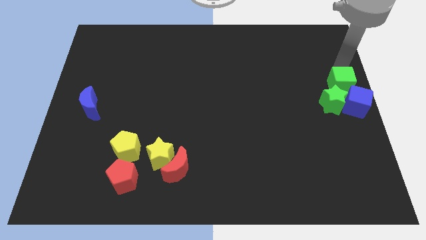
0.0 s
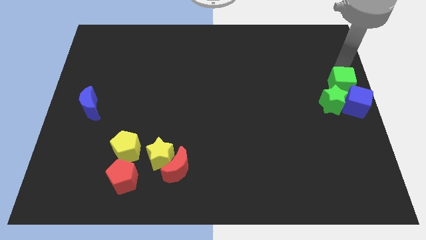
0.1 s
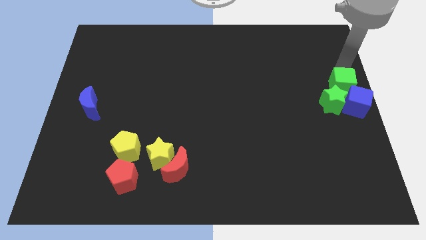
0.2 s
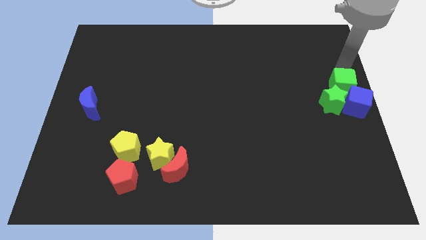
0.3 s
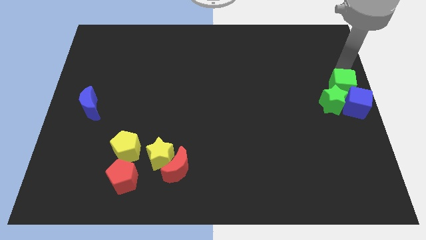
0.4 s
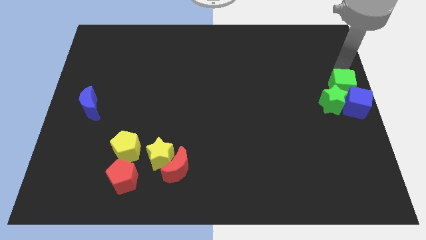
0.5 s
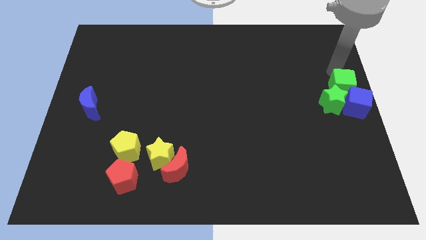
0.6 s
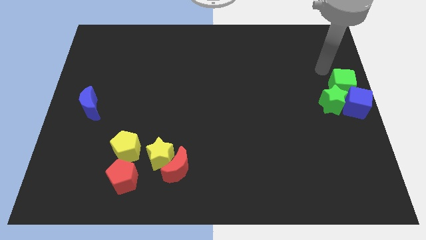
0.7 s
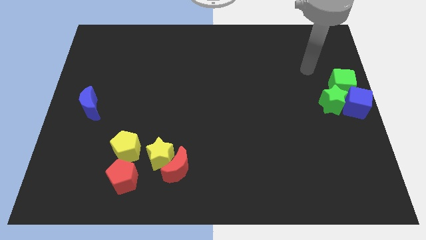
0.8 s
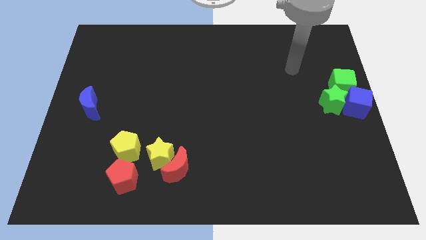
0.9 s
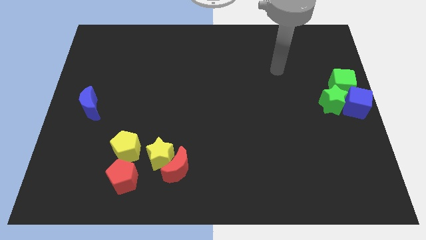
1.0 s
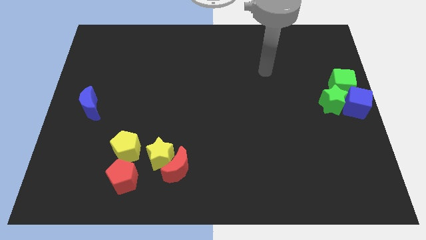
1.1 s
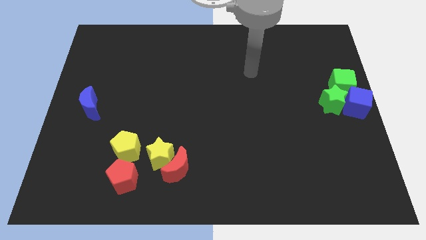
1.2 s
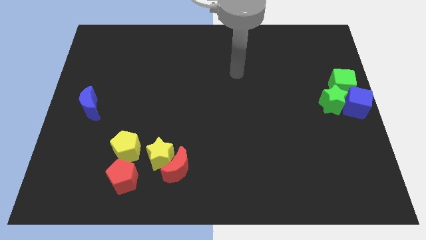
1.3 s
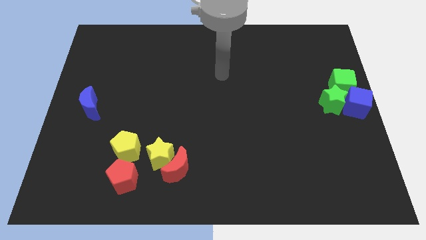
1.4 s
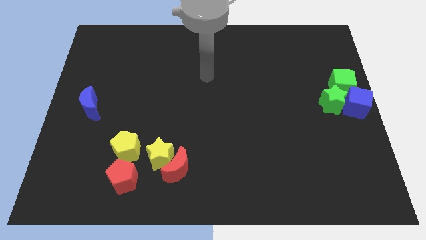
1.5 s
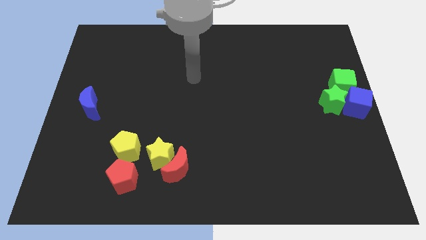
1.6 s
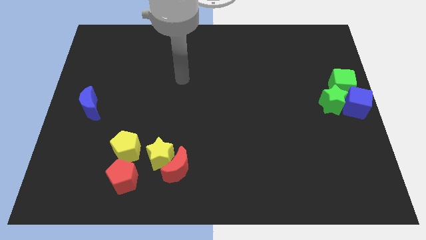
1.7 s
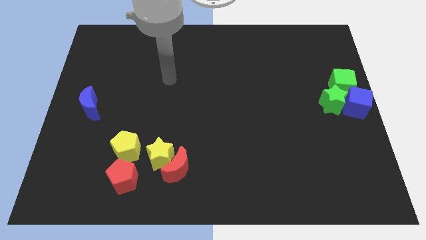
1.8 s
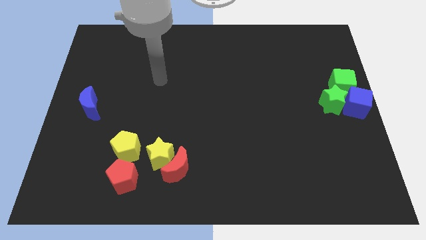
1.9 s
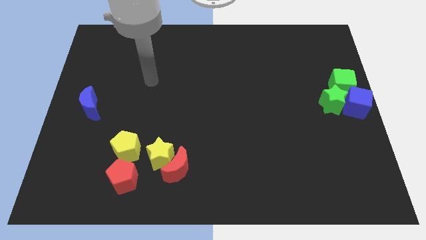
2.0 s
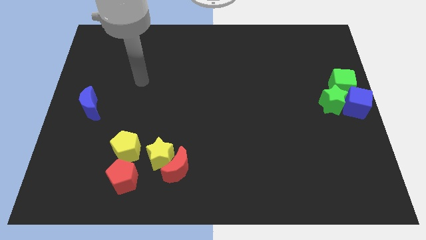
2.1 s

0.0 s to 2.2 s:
move yourself away from the green cube

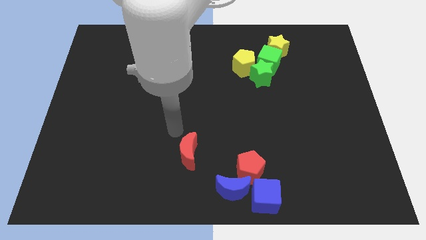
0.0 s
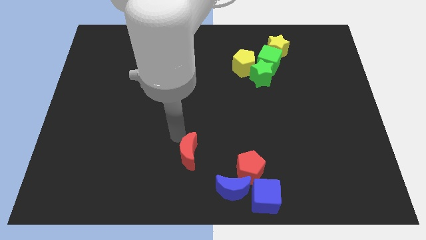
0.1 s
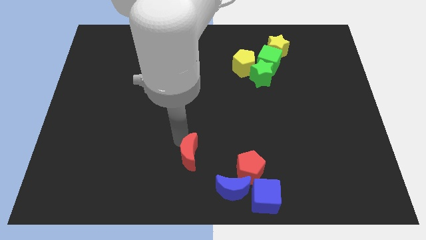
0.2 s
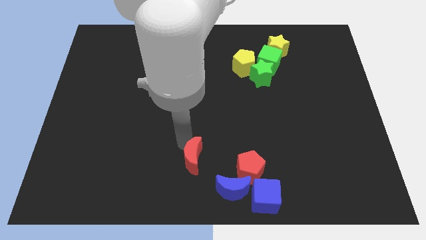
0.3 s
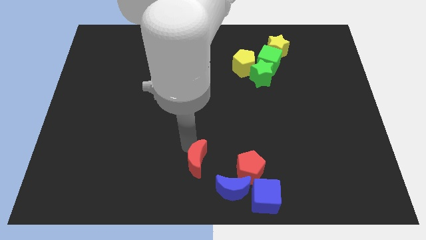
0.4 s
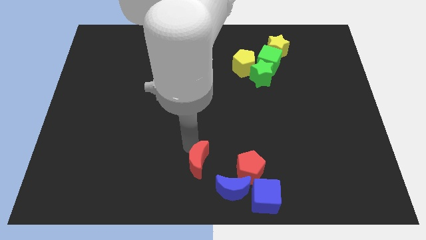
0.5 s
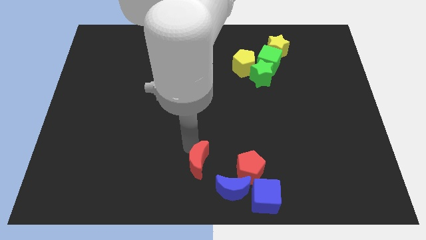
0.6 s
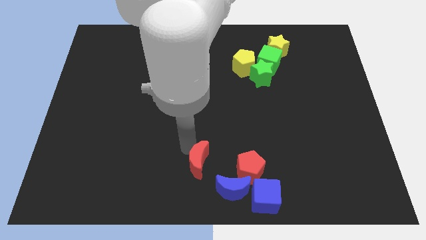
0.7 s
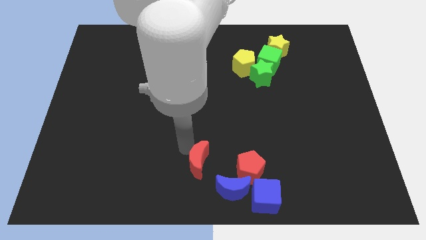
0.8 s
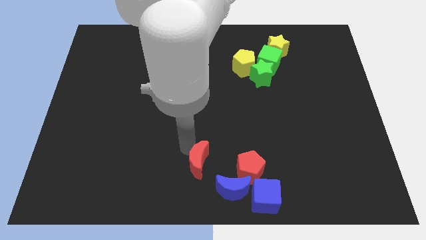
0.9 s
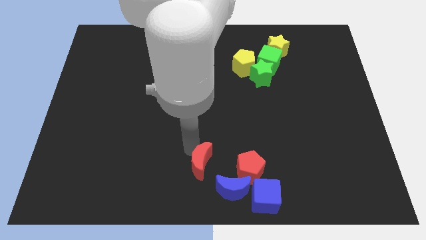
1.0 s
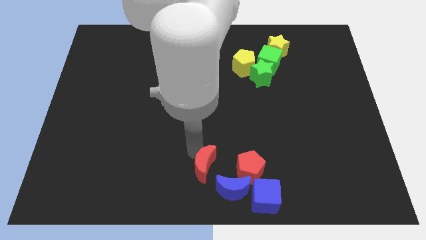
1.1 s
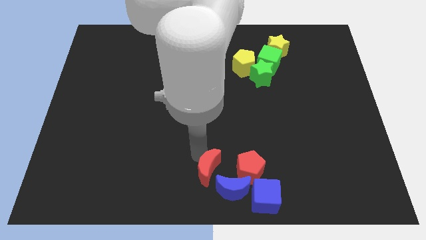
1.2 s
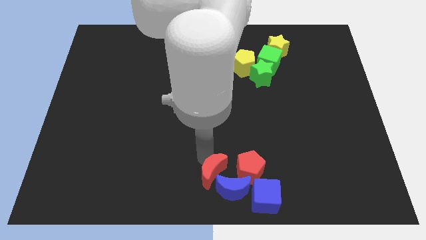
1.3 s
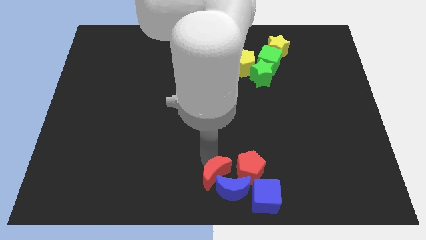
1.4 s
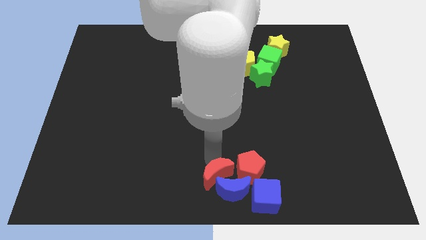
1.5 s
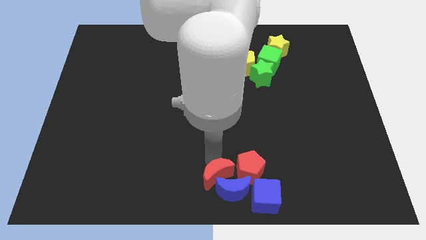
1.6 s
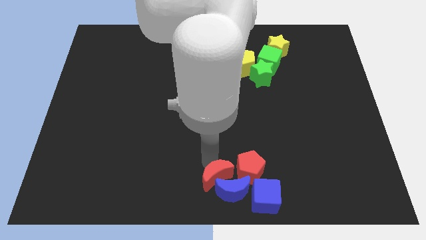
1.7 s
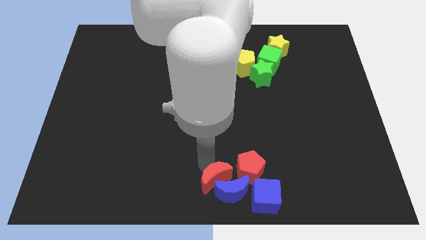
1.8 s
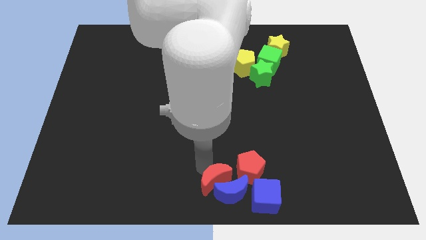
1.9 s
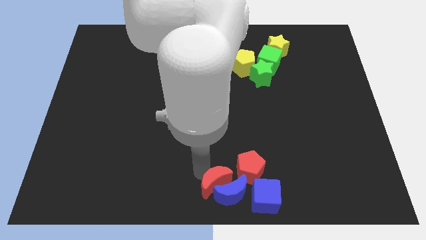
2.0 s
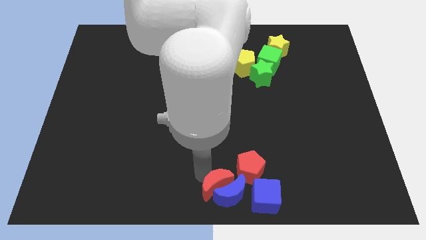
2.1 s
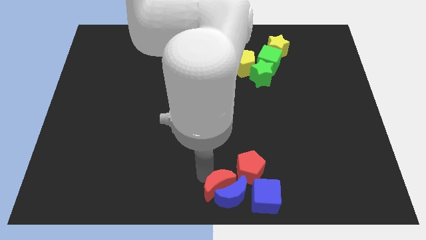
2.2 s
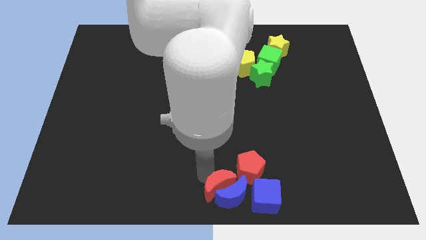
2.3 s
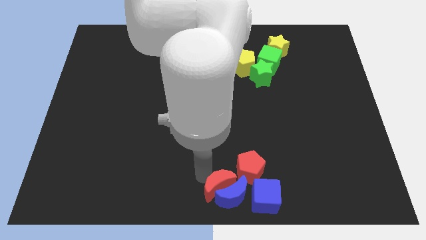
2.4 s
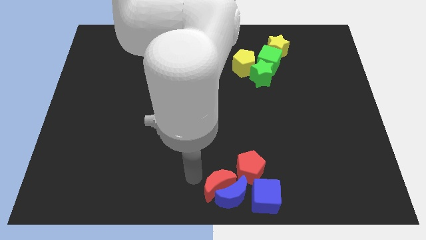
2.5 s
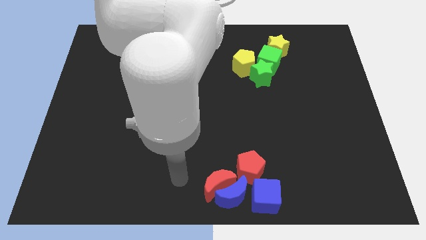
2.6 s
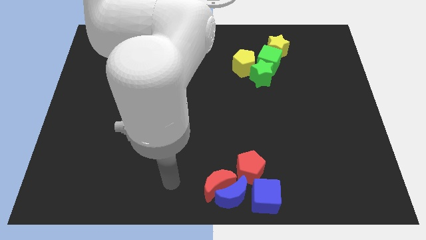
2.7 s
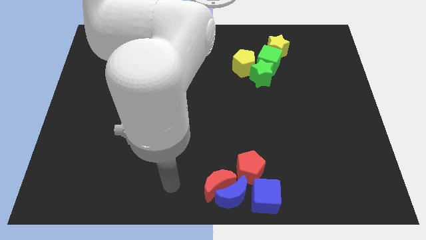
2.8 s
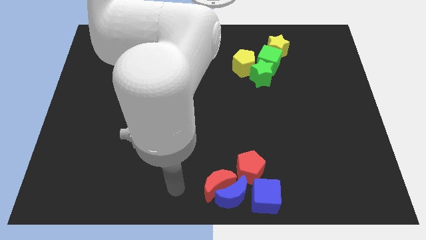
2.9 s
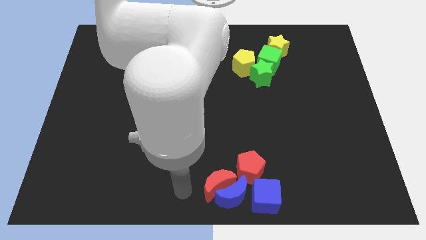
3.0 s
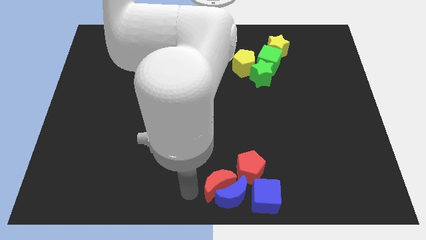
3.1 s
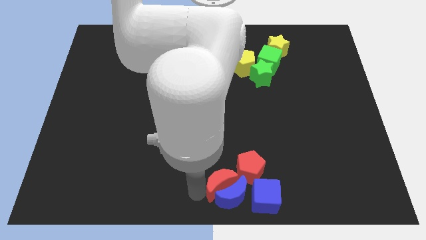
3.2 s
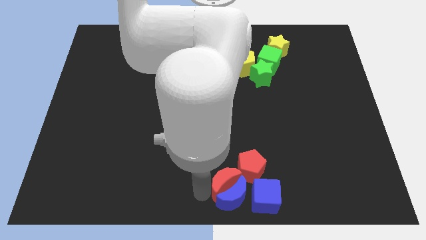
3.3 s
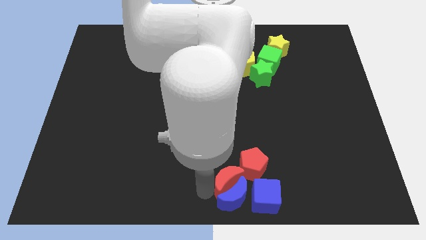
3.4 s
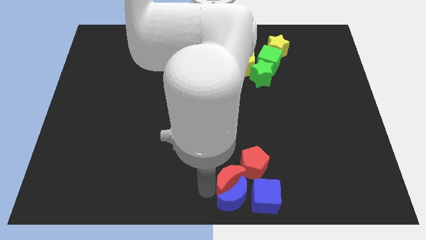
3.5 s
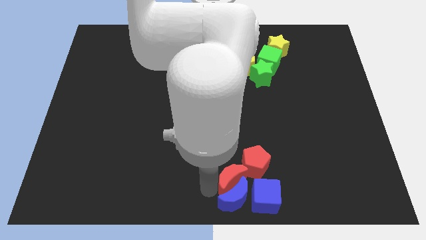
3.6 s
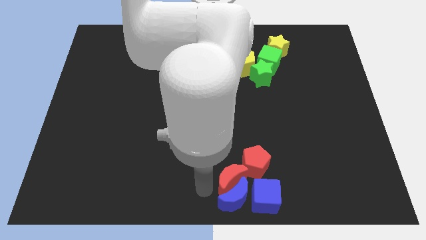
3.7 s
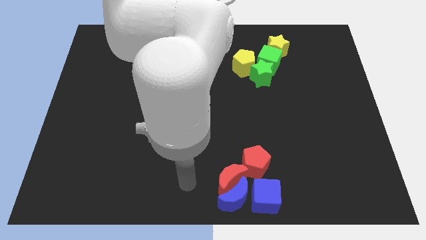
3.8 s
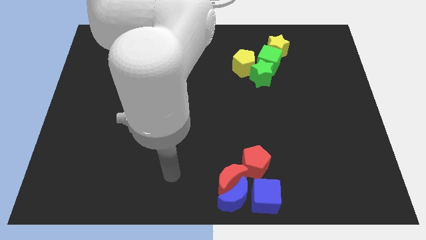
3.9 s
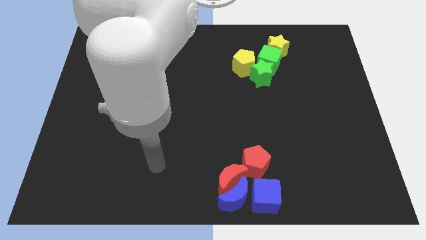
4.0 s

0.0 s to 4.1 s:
push the red crescent into both the blue blocks and the red pentagon

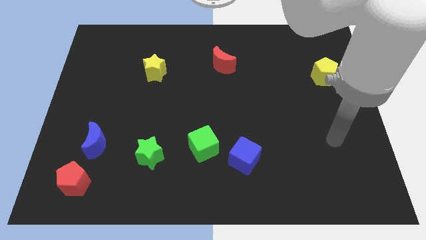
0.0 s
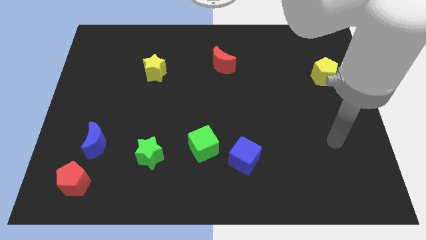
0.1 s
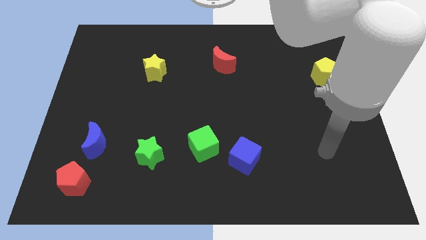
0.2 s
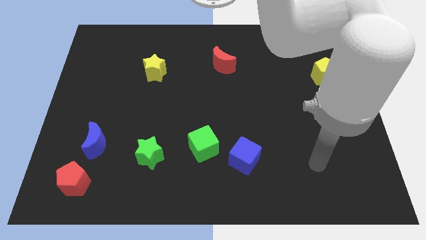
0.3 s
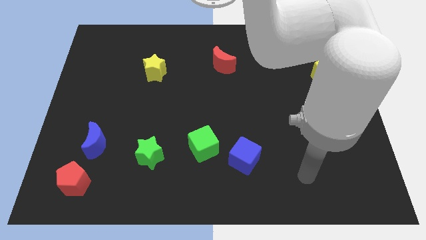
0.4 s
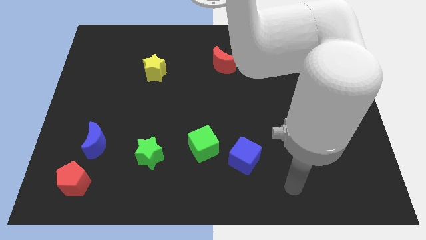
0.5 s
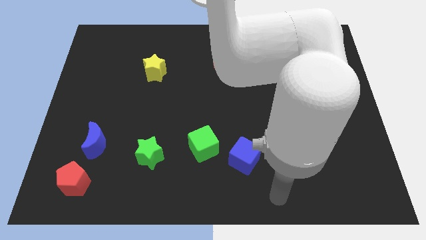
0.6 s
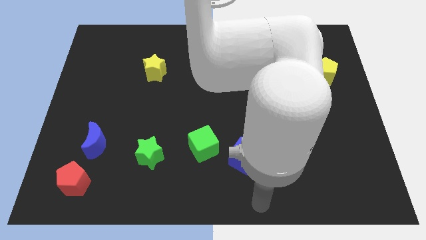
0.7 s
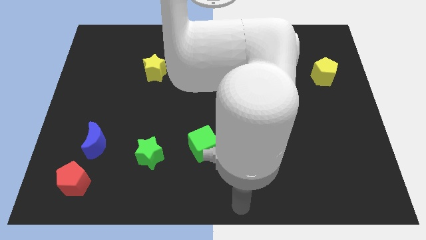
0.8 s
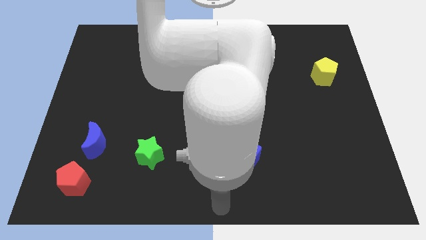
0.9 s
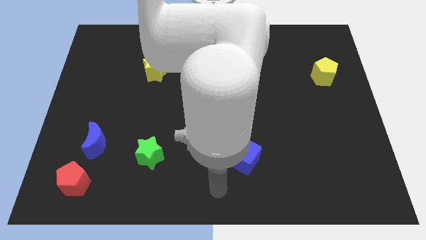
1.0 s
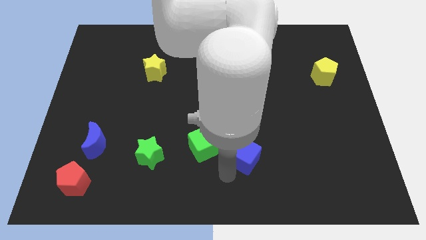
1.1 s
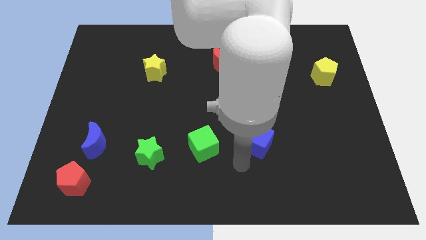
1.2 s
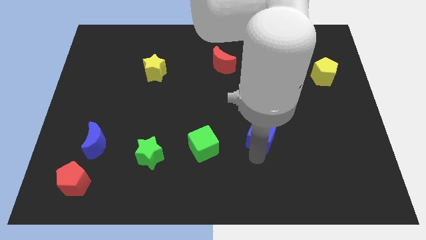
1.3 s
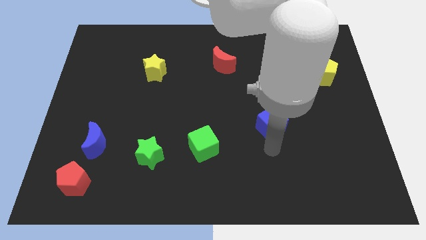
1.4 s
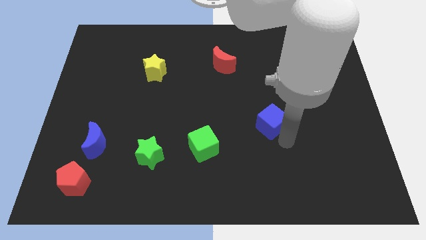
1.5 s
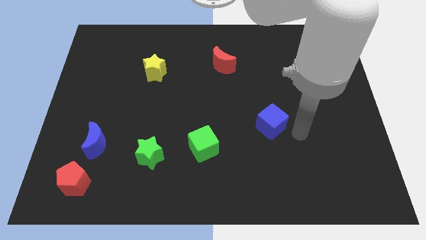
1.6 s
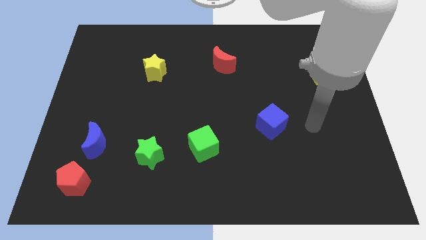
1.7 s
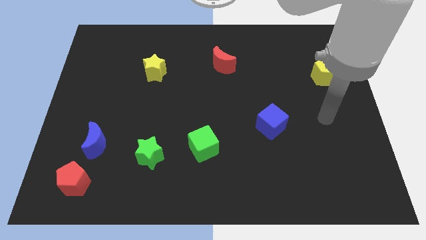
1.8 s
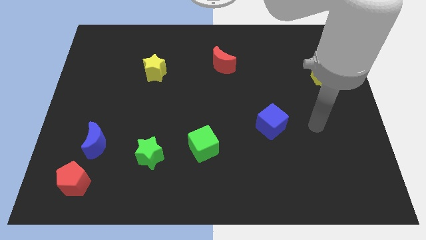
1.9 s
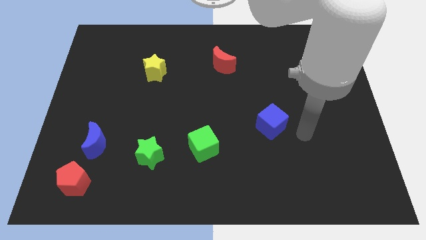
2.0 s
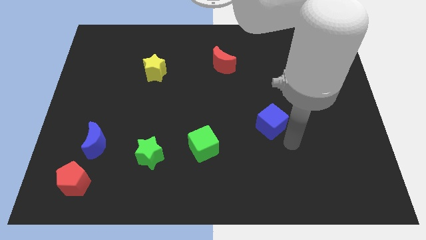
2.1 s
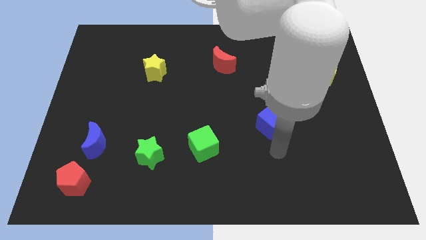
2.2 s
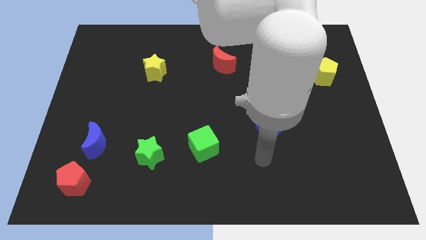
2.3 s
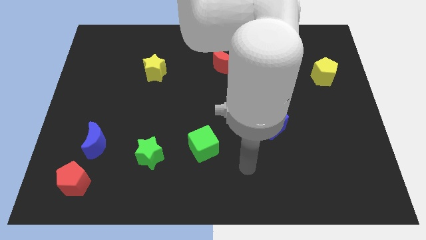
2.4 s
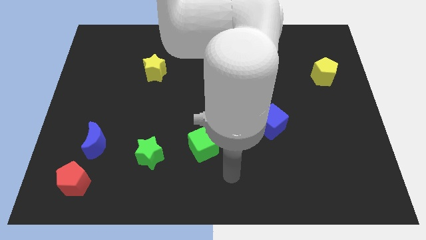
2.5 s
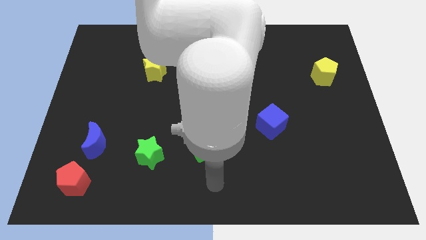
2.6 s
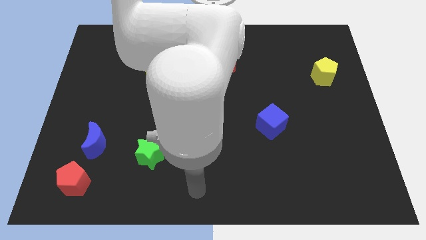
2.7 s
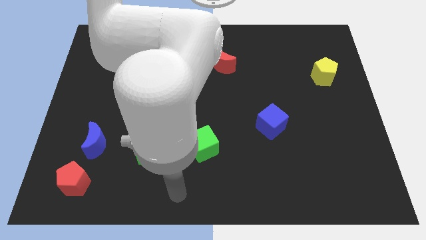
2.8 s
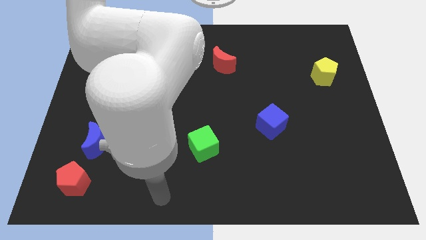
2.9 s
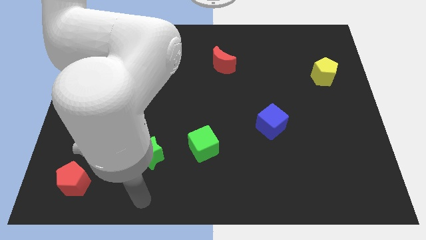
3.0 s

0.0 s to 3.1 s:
push the blue cube slightly upwards
